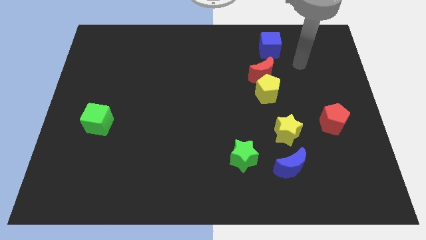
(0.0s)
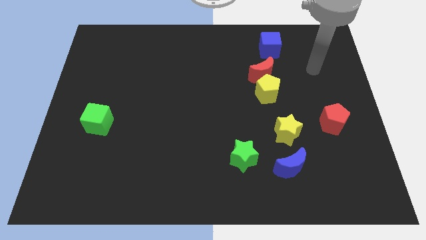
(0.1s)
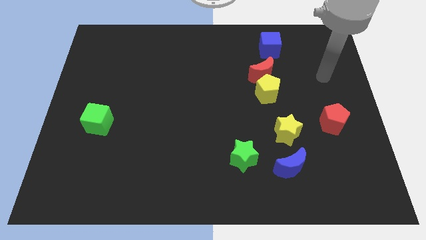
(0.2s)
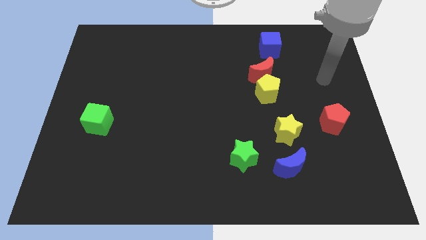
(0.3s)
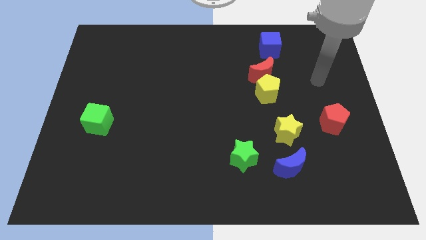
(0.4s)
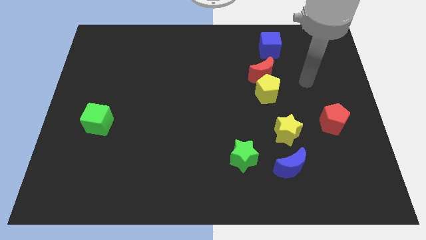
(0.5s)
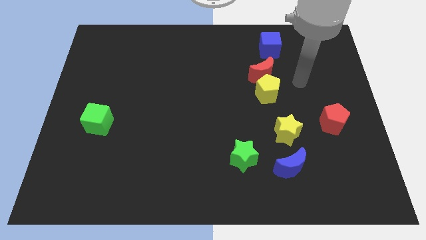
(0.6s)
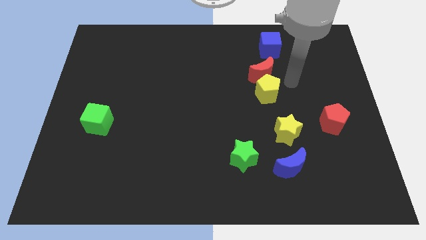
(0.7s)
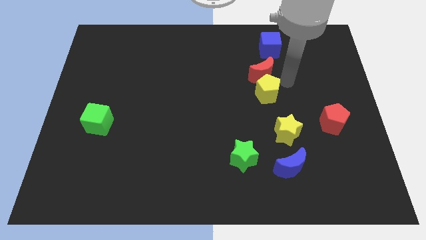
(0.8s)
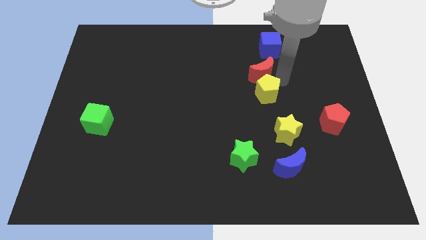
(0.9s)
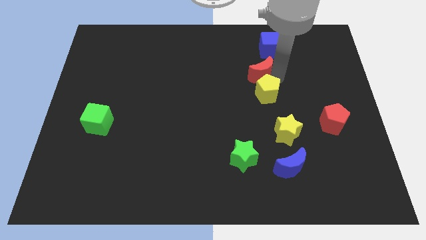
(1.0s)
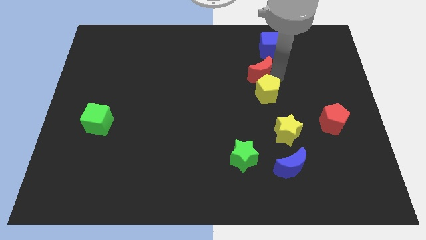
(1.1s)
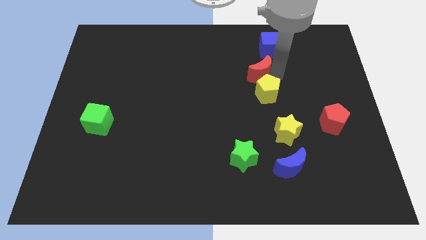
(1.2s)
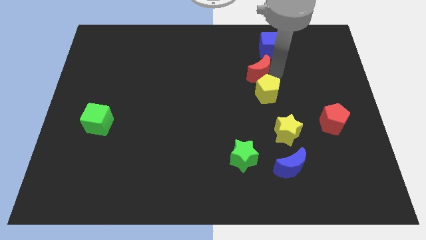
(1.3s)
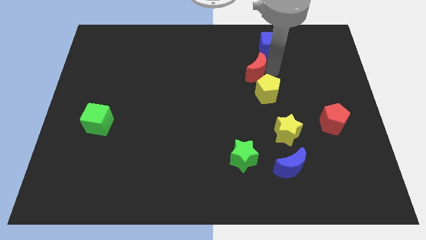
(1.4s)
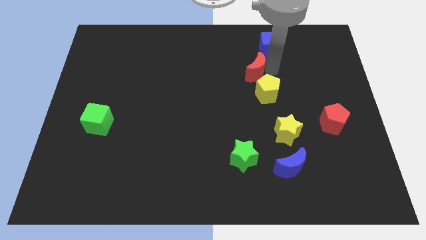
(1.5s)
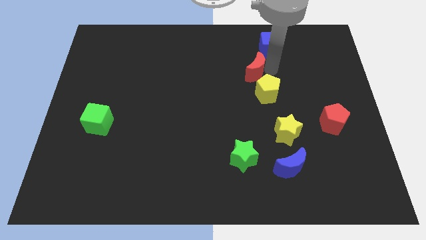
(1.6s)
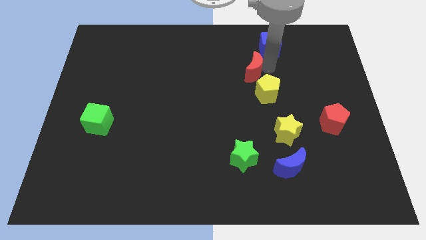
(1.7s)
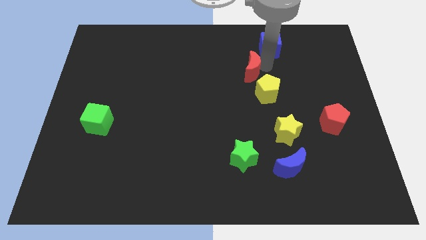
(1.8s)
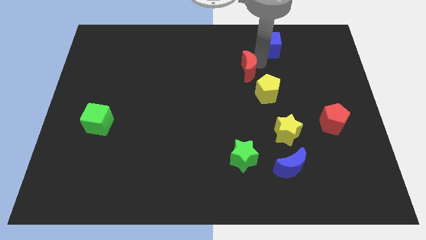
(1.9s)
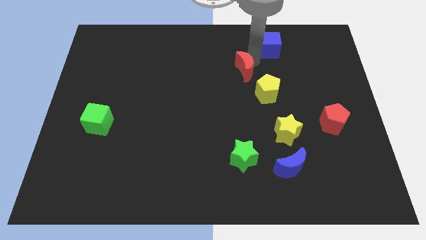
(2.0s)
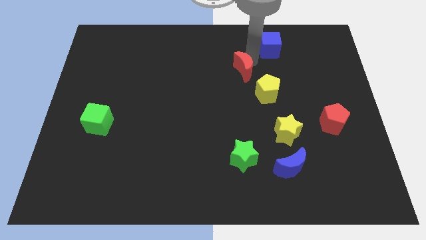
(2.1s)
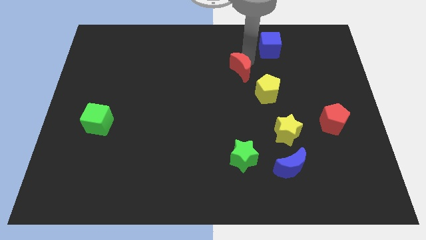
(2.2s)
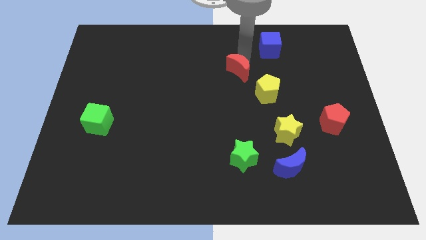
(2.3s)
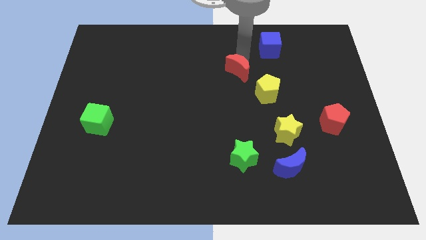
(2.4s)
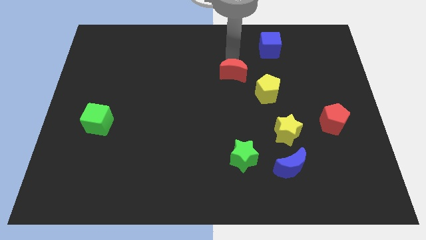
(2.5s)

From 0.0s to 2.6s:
separate red moon from the blue cube

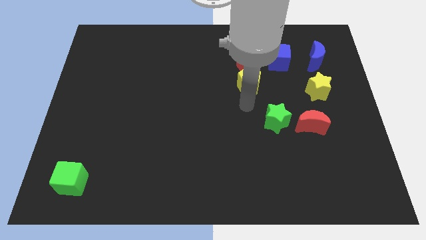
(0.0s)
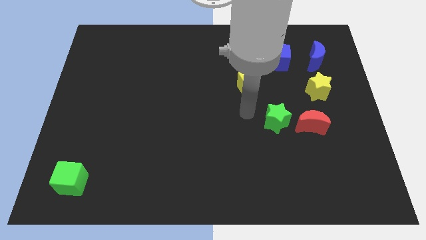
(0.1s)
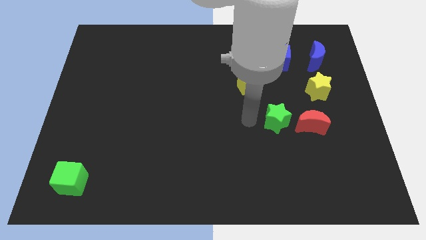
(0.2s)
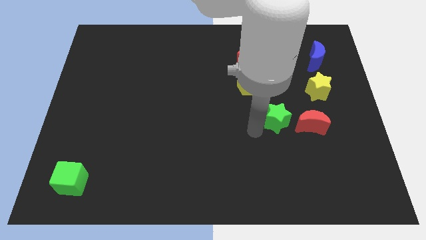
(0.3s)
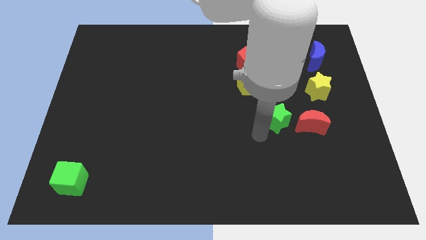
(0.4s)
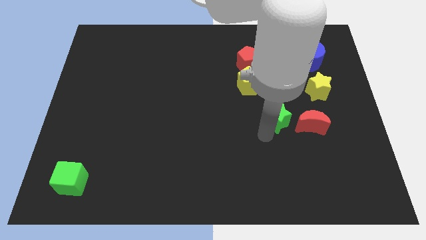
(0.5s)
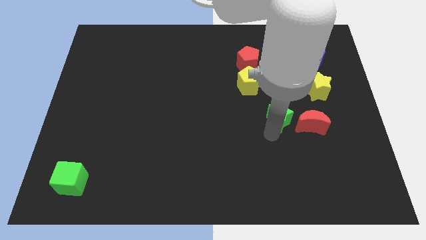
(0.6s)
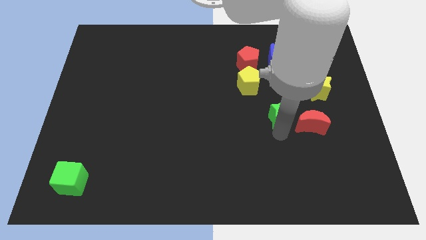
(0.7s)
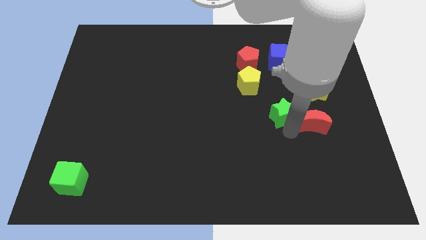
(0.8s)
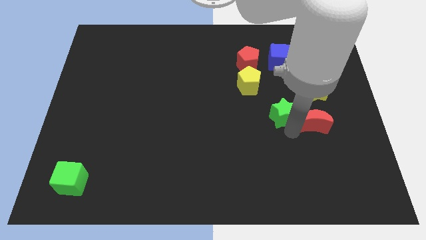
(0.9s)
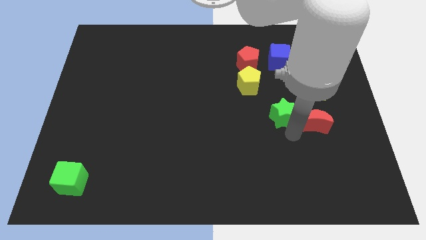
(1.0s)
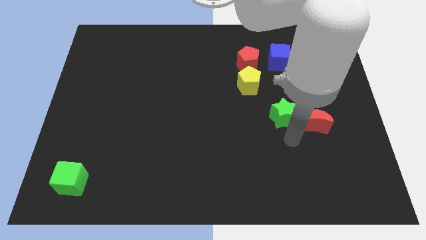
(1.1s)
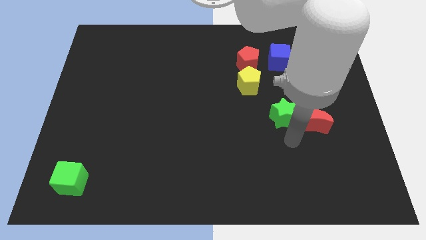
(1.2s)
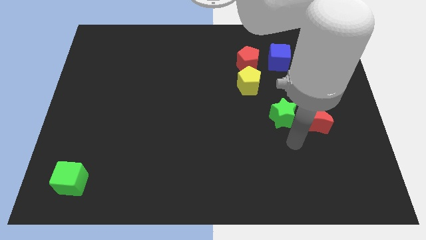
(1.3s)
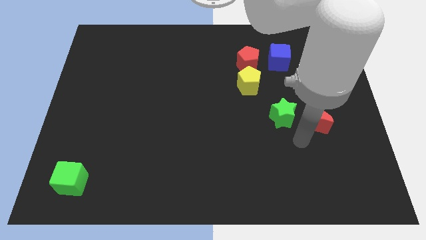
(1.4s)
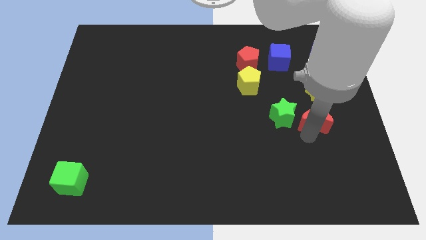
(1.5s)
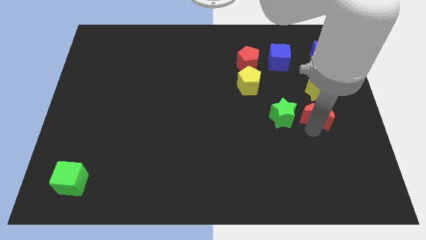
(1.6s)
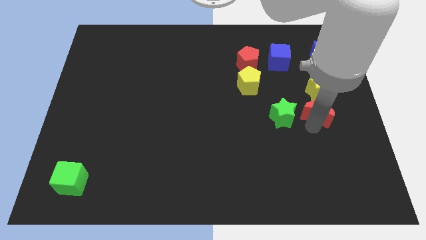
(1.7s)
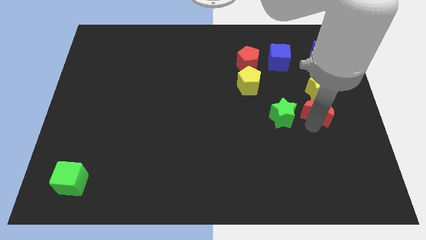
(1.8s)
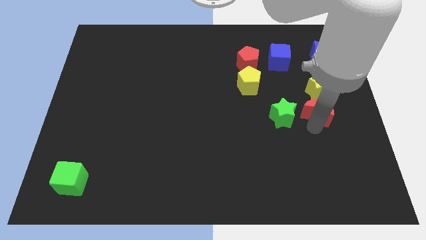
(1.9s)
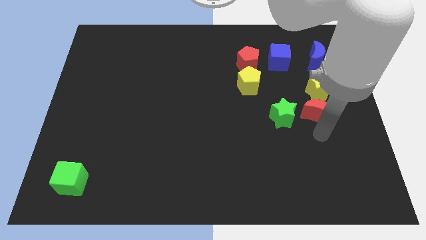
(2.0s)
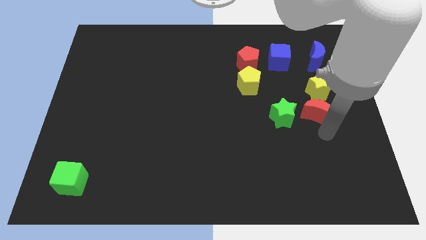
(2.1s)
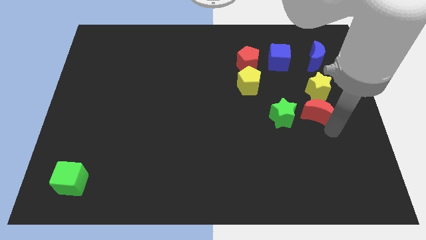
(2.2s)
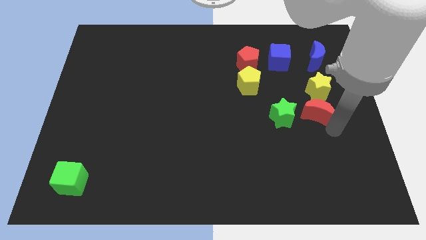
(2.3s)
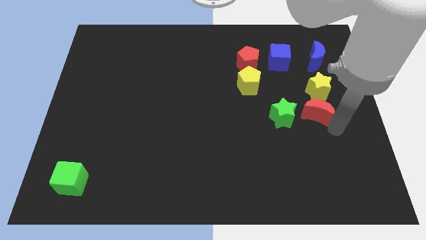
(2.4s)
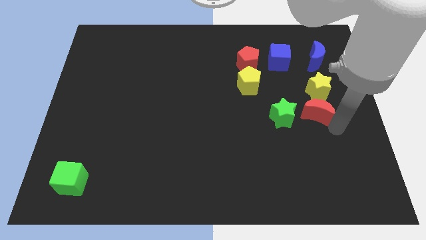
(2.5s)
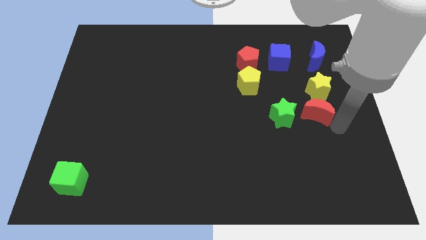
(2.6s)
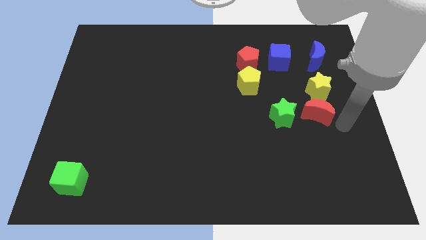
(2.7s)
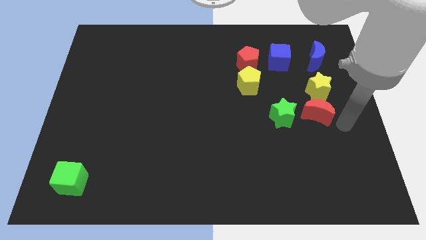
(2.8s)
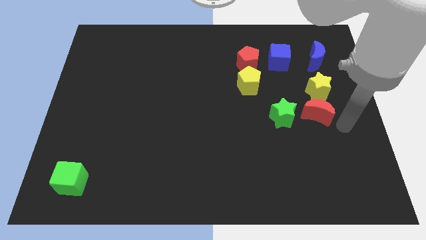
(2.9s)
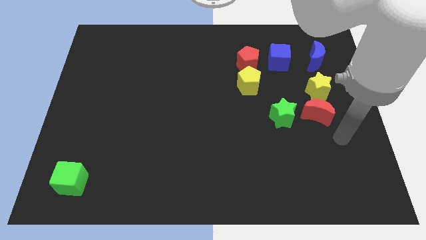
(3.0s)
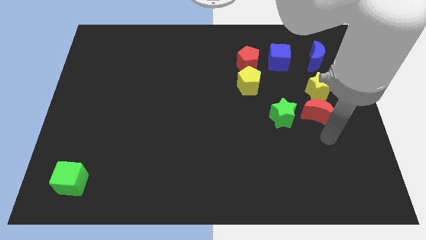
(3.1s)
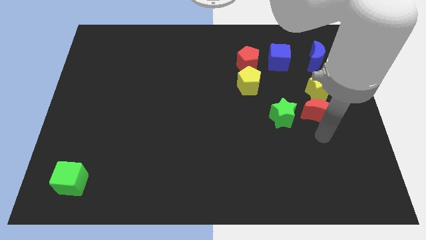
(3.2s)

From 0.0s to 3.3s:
move the arm below the red moon

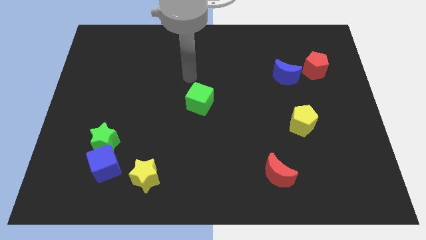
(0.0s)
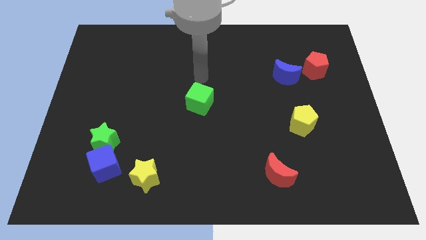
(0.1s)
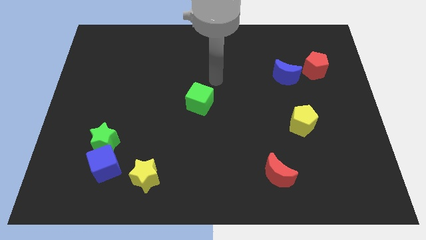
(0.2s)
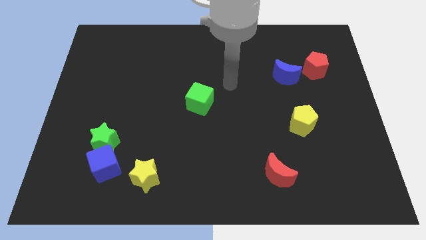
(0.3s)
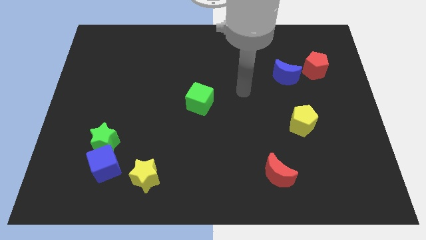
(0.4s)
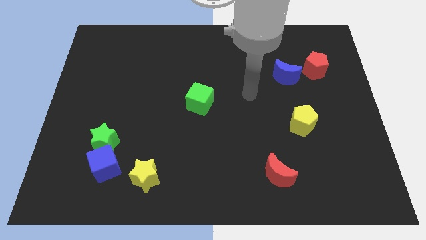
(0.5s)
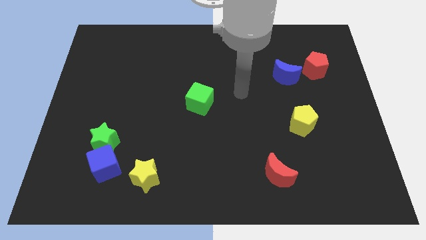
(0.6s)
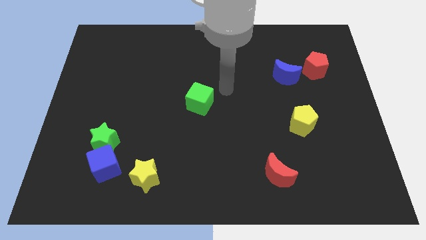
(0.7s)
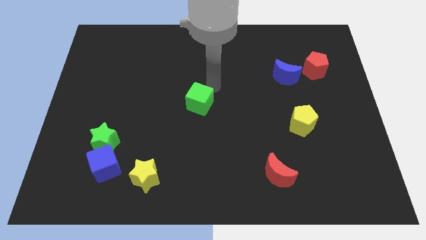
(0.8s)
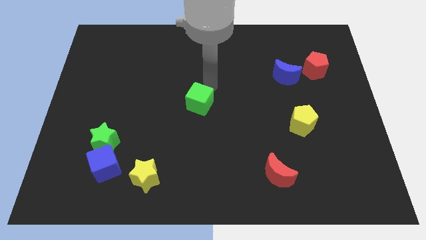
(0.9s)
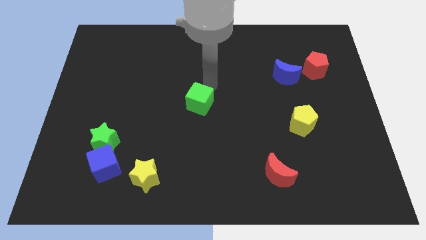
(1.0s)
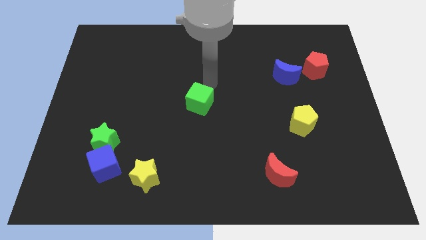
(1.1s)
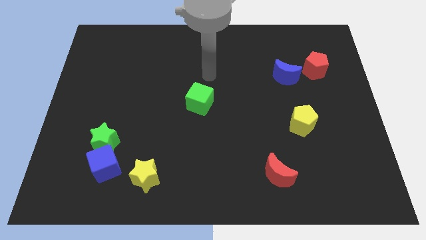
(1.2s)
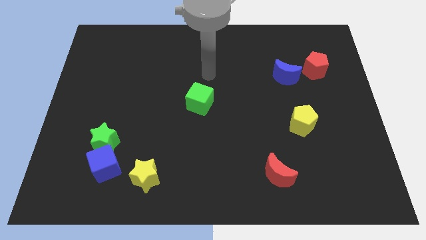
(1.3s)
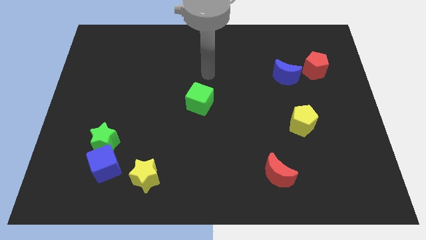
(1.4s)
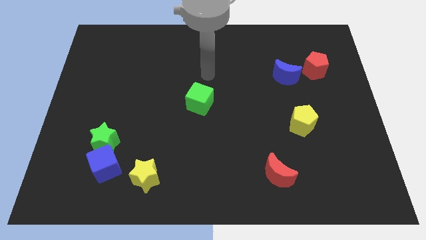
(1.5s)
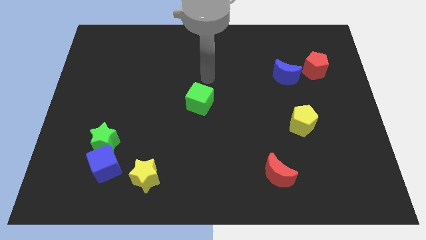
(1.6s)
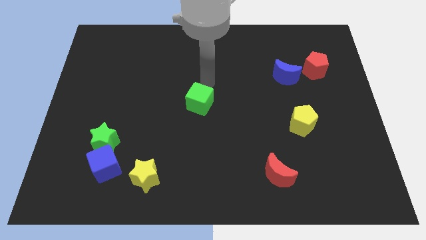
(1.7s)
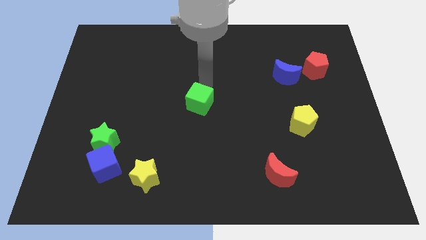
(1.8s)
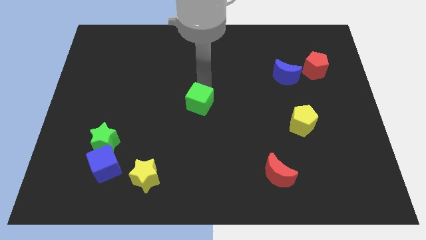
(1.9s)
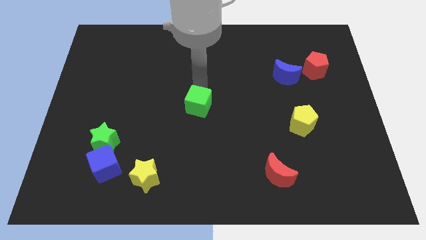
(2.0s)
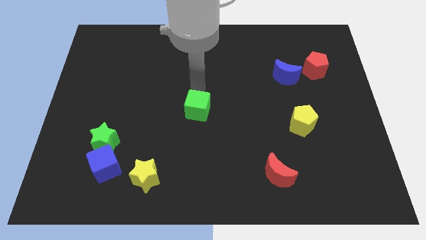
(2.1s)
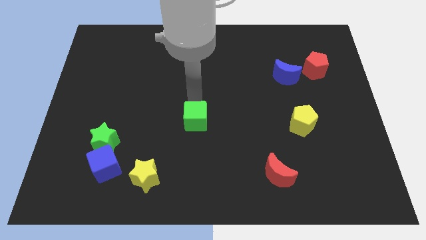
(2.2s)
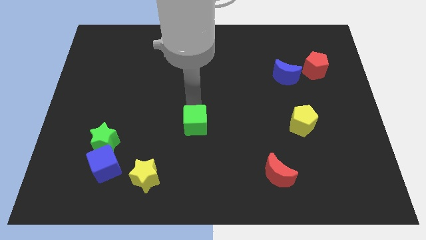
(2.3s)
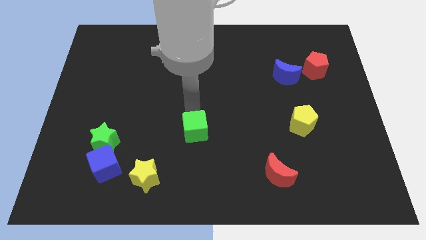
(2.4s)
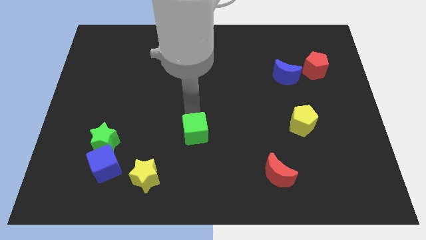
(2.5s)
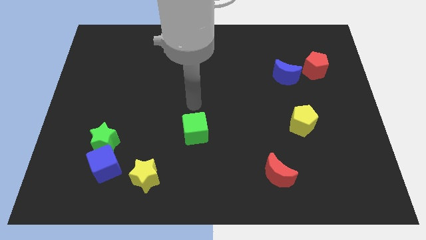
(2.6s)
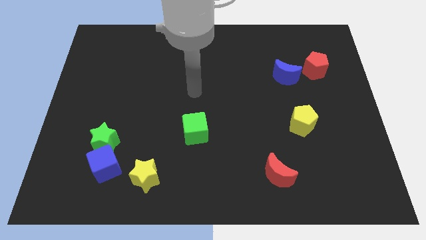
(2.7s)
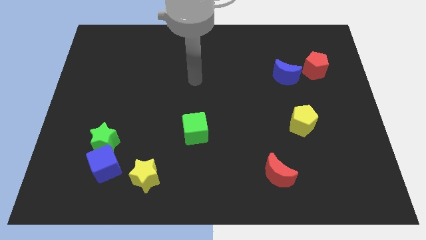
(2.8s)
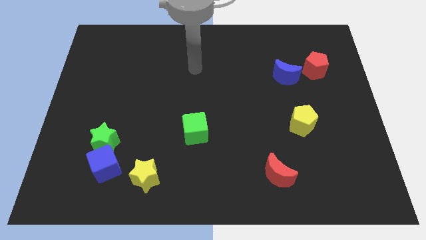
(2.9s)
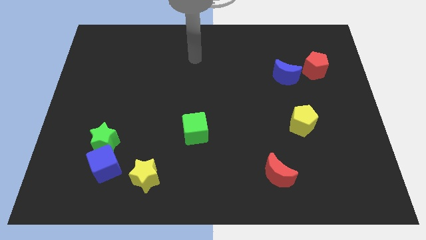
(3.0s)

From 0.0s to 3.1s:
move the green cube towards the bottom center of the board

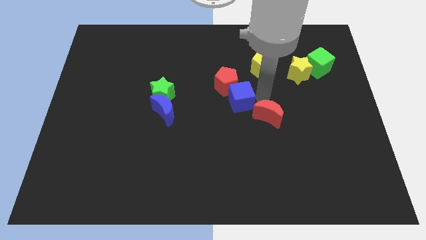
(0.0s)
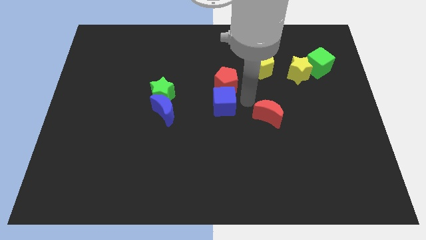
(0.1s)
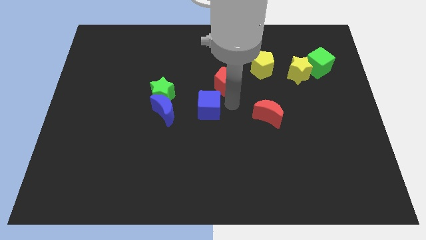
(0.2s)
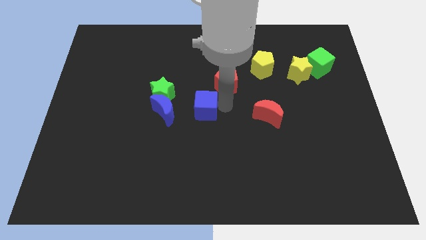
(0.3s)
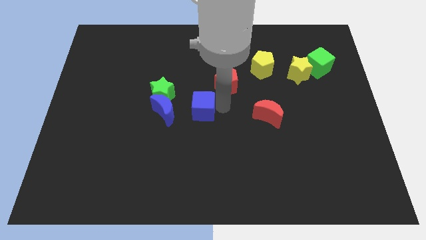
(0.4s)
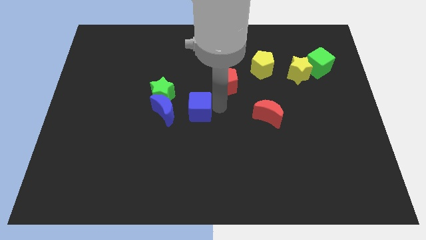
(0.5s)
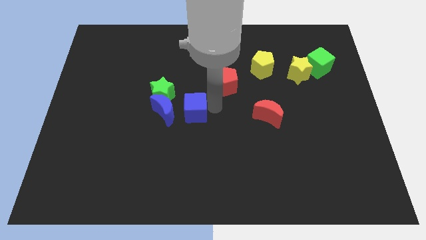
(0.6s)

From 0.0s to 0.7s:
separate the blue cube from the red pentagon
